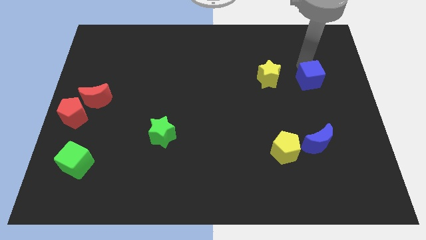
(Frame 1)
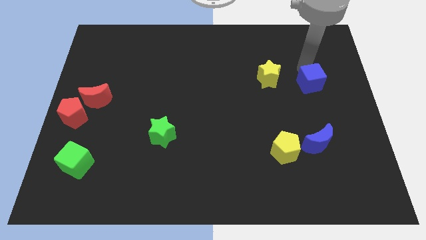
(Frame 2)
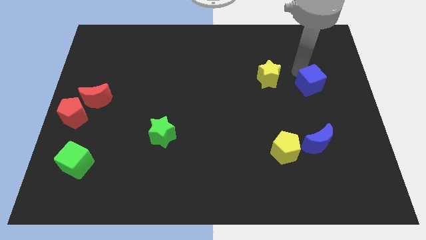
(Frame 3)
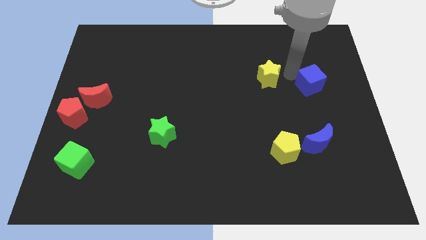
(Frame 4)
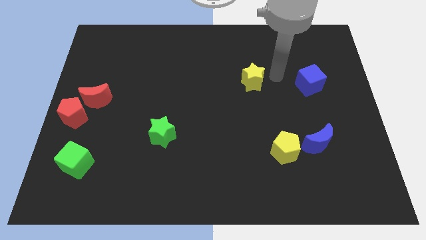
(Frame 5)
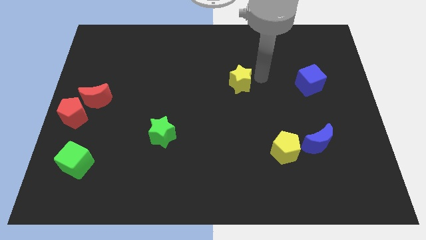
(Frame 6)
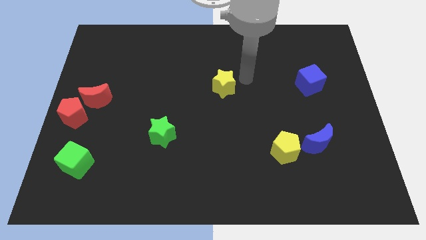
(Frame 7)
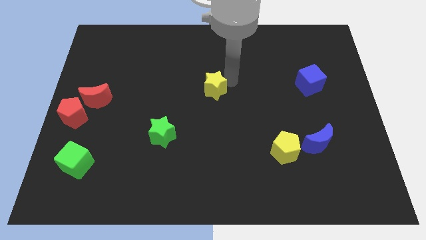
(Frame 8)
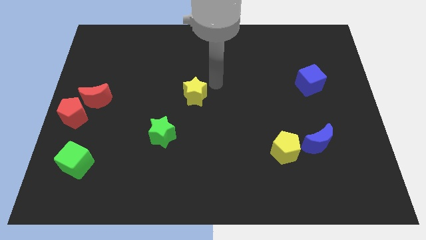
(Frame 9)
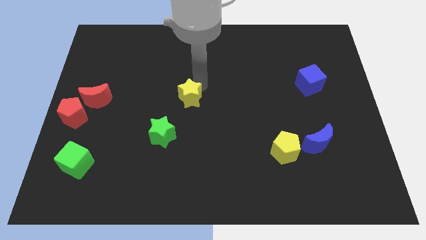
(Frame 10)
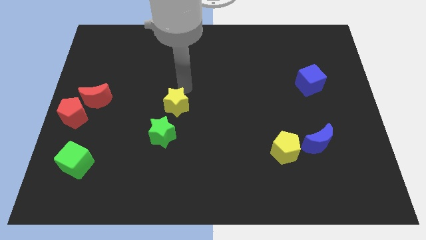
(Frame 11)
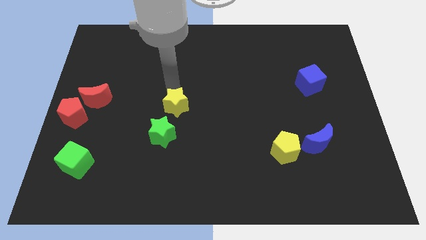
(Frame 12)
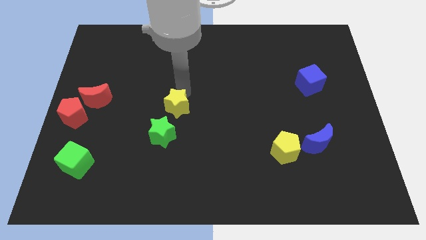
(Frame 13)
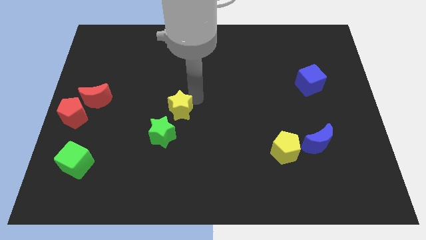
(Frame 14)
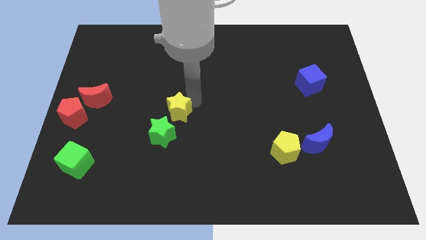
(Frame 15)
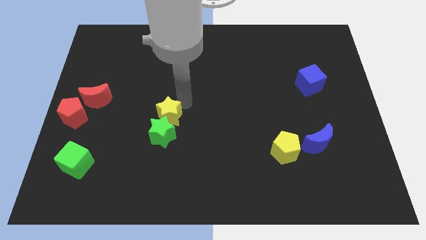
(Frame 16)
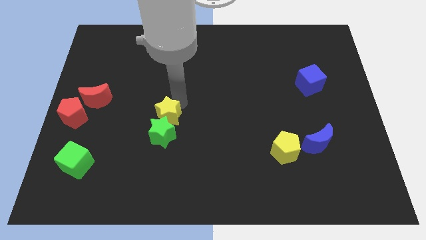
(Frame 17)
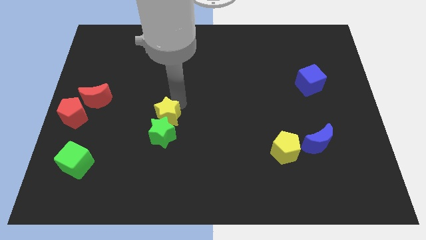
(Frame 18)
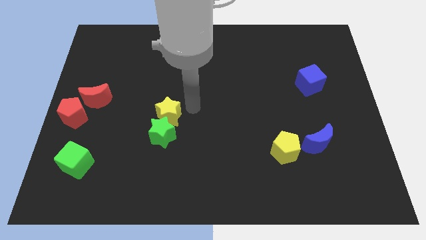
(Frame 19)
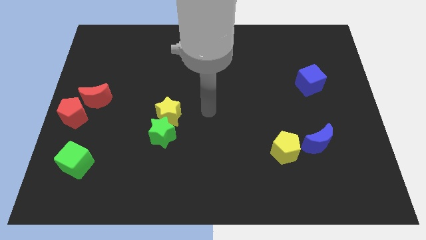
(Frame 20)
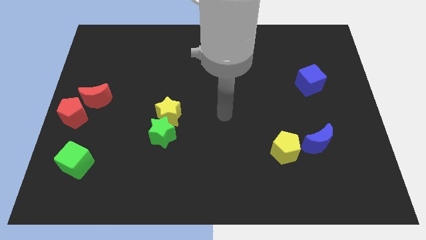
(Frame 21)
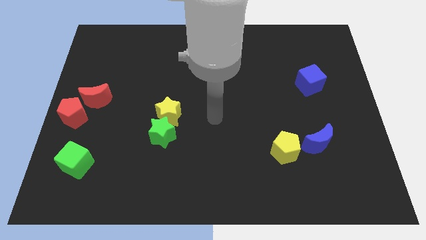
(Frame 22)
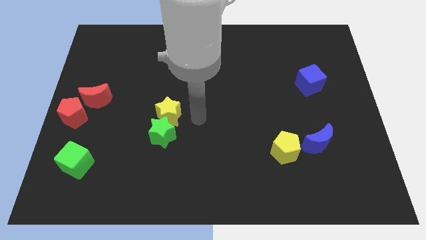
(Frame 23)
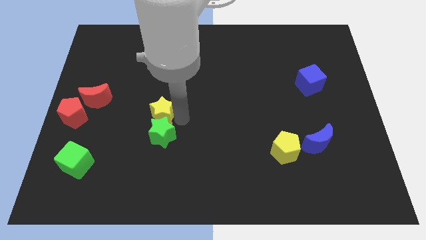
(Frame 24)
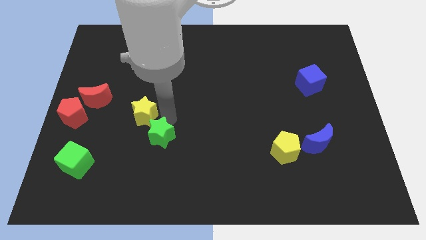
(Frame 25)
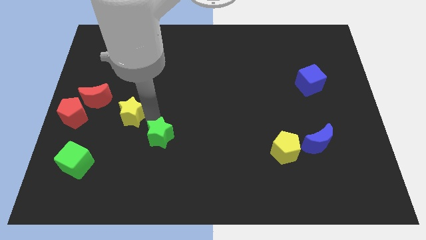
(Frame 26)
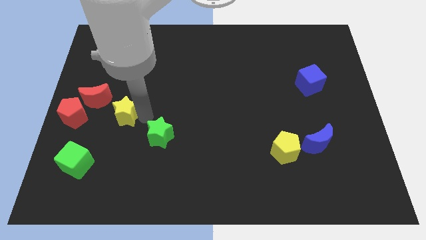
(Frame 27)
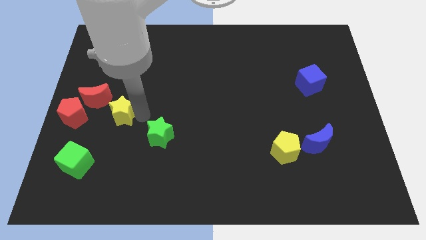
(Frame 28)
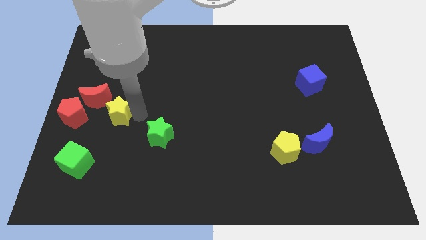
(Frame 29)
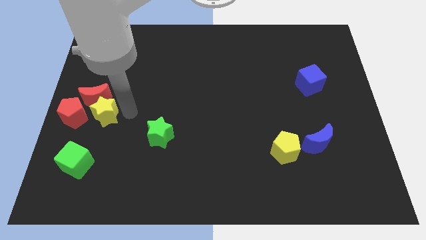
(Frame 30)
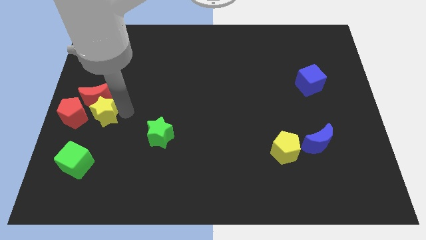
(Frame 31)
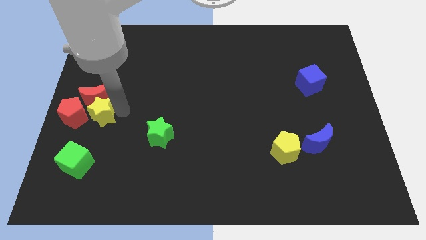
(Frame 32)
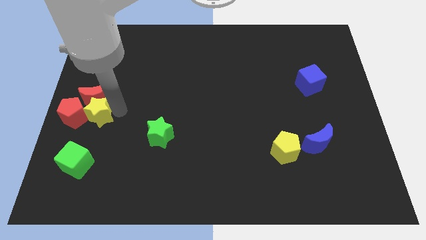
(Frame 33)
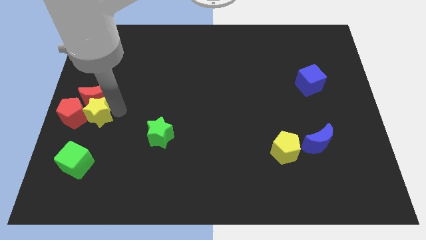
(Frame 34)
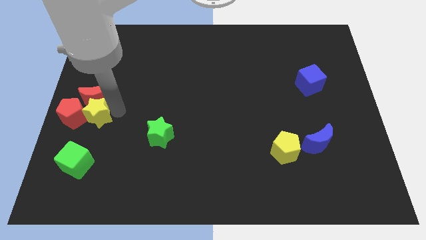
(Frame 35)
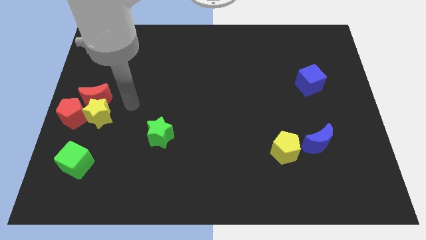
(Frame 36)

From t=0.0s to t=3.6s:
place the yellow star below the red moon

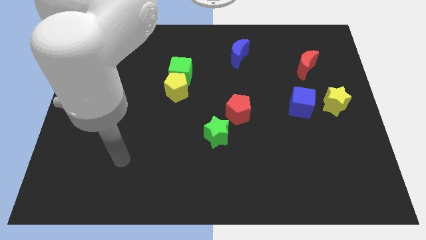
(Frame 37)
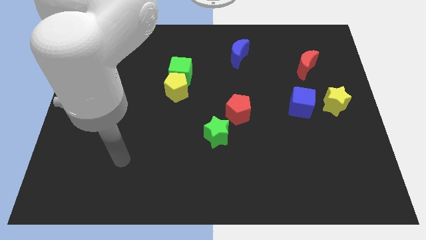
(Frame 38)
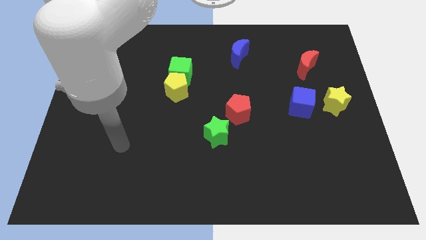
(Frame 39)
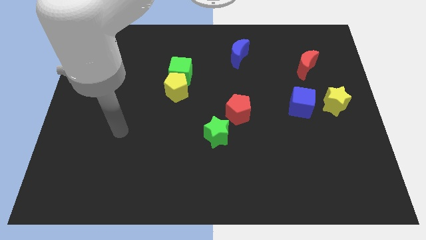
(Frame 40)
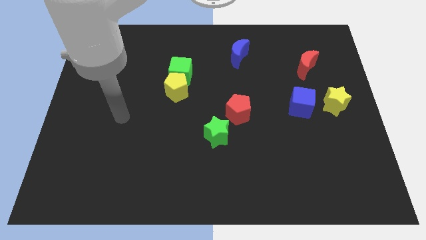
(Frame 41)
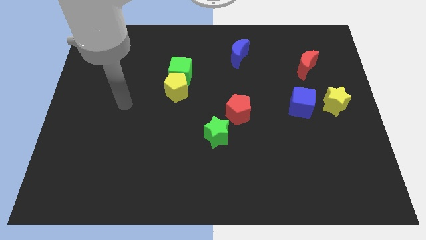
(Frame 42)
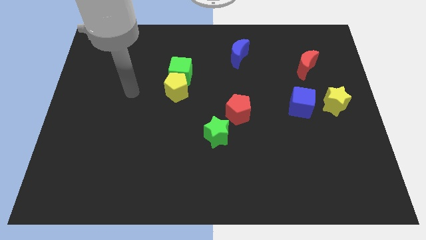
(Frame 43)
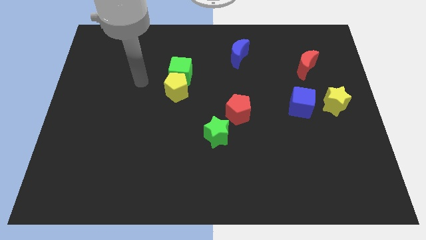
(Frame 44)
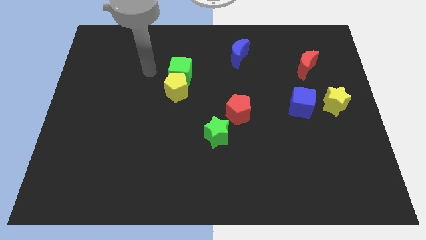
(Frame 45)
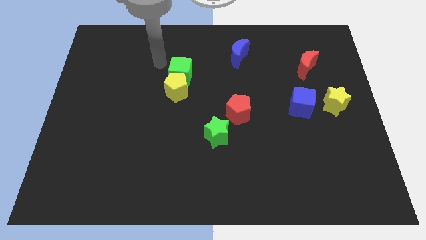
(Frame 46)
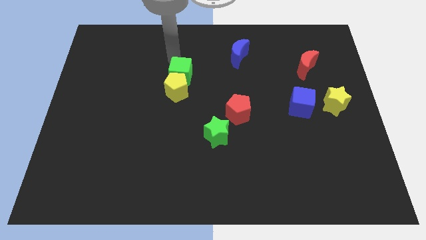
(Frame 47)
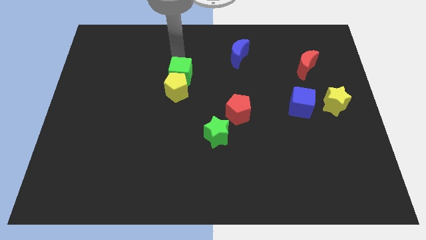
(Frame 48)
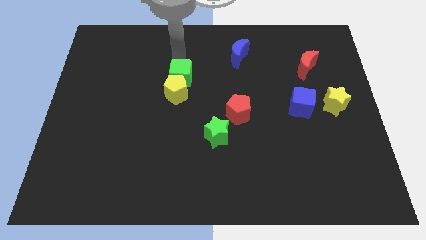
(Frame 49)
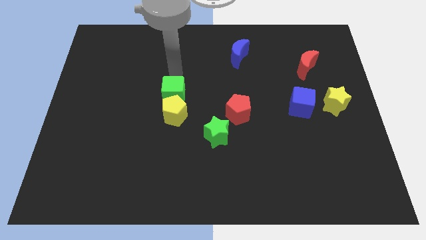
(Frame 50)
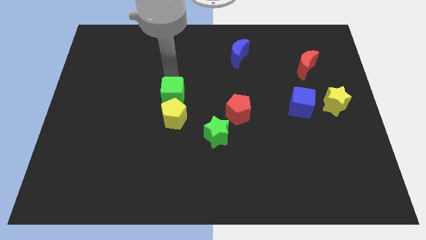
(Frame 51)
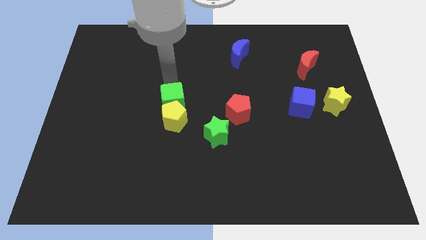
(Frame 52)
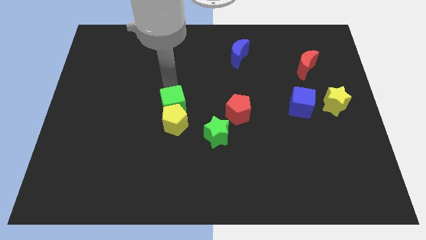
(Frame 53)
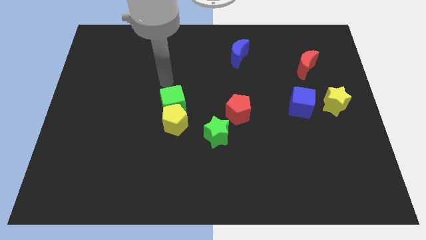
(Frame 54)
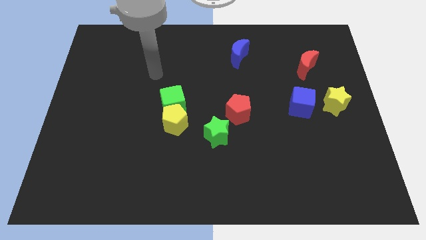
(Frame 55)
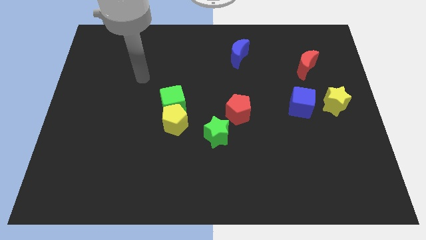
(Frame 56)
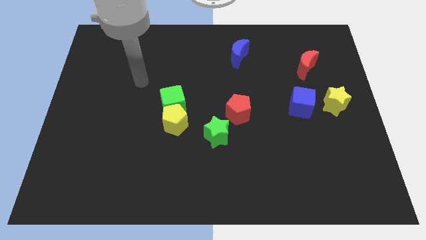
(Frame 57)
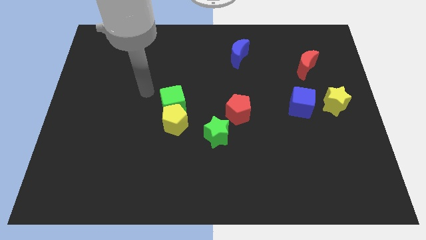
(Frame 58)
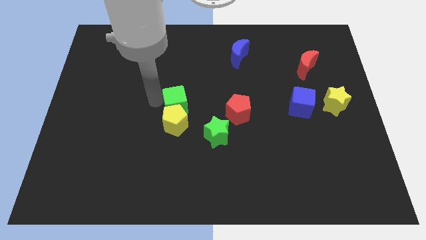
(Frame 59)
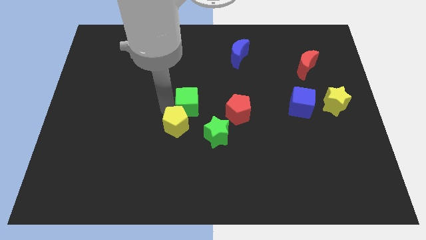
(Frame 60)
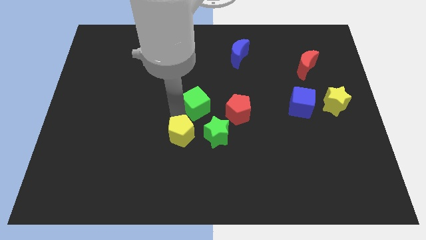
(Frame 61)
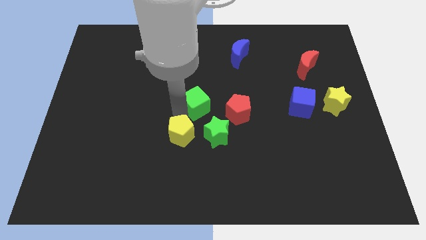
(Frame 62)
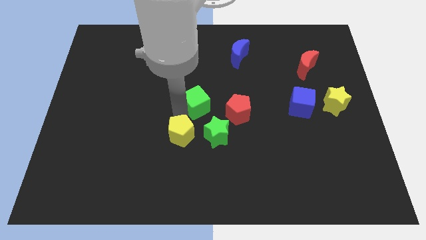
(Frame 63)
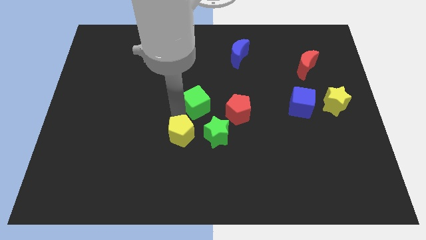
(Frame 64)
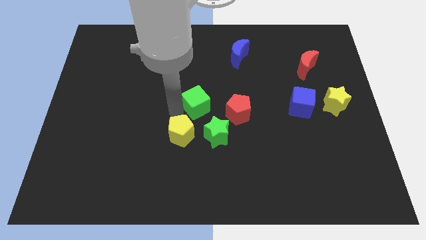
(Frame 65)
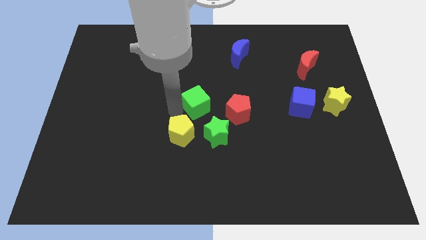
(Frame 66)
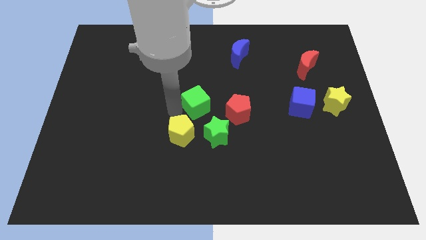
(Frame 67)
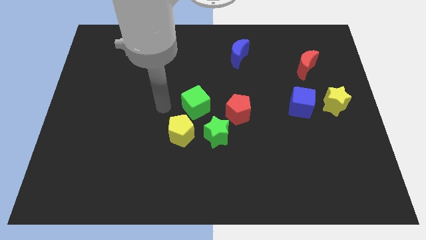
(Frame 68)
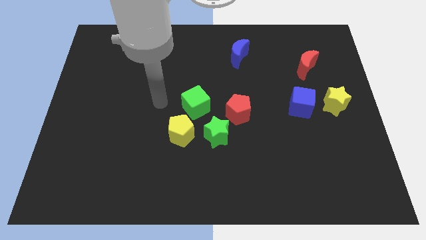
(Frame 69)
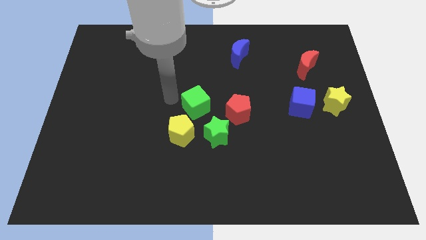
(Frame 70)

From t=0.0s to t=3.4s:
move the green cube to the left of the red pentagon

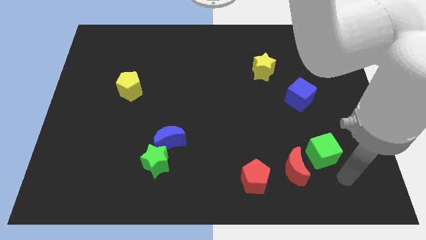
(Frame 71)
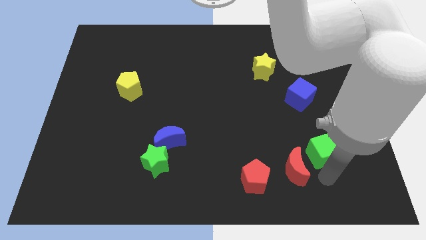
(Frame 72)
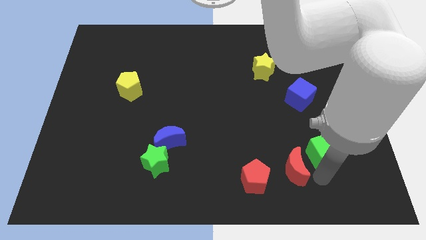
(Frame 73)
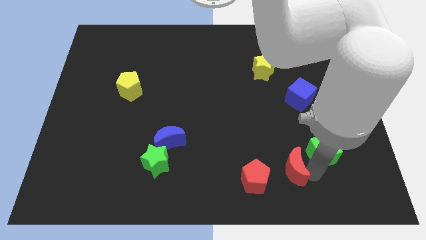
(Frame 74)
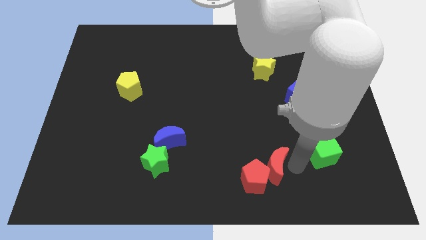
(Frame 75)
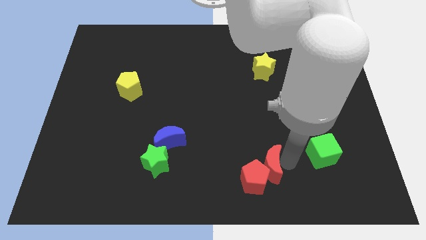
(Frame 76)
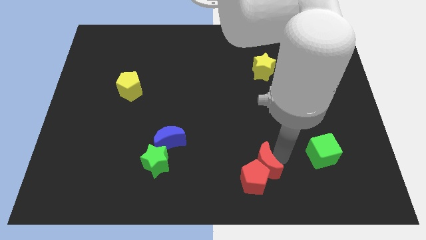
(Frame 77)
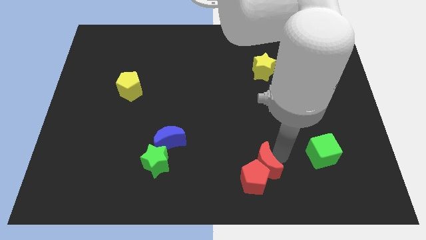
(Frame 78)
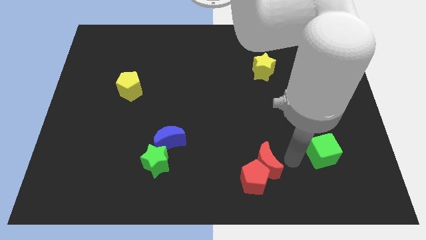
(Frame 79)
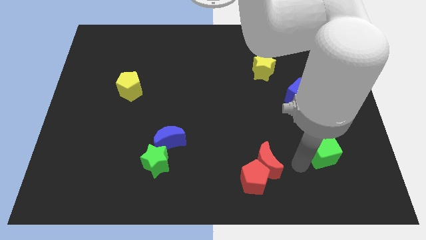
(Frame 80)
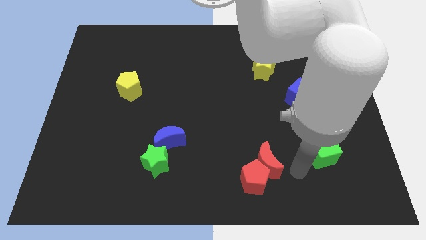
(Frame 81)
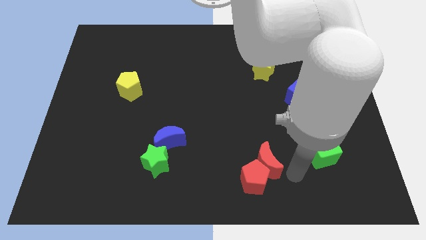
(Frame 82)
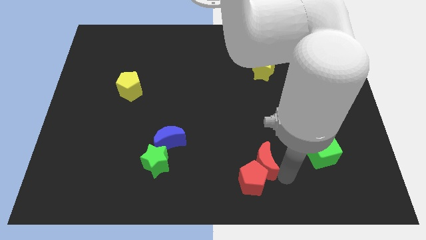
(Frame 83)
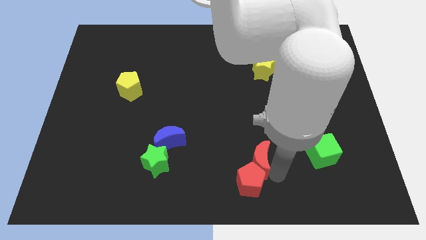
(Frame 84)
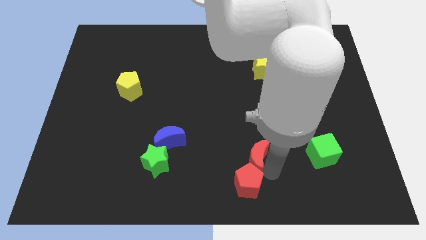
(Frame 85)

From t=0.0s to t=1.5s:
place the red crescent on top of red pentagon

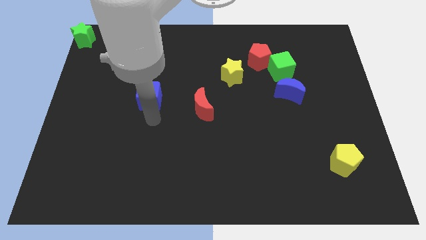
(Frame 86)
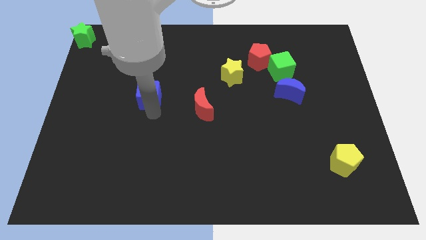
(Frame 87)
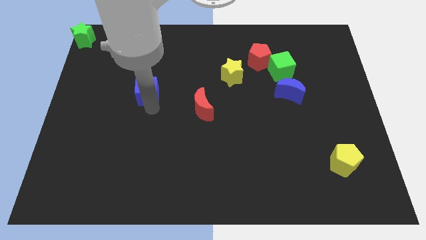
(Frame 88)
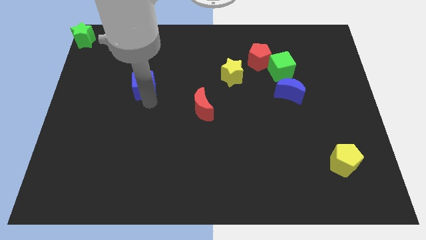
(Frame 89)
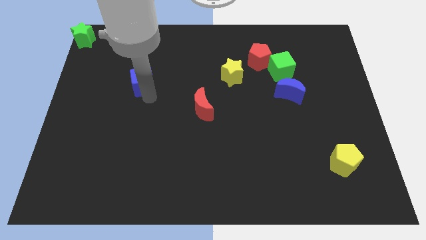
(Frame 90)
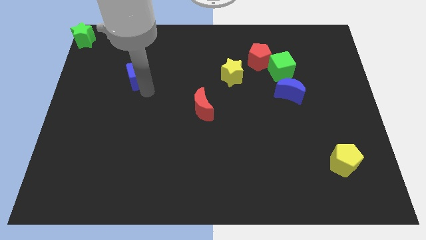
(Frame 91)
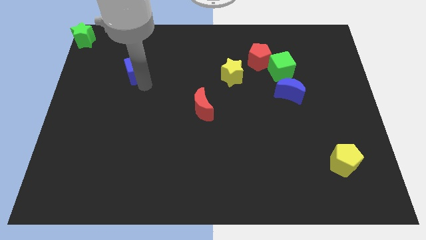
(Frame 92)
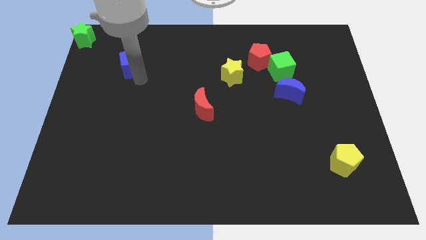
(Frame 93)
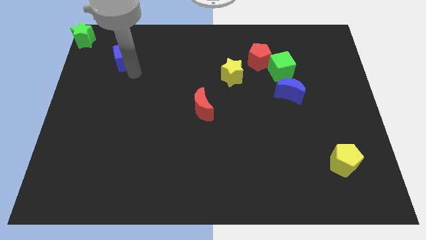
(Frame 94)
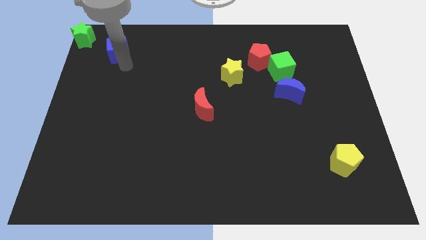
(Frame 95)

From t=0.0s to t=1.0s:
move the blue cube to the top of the board
